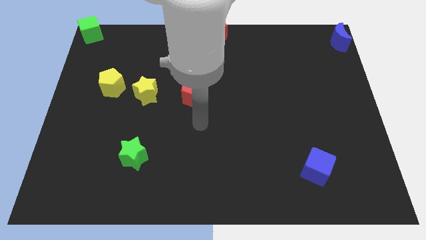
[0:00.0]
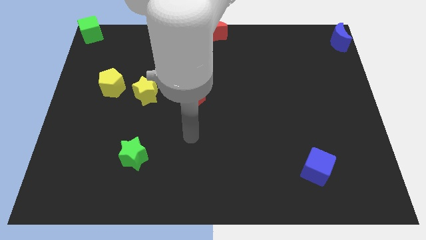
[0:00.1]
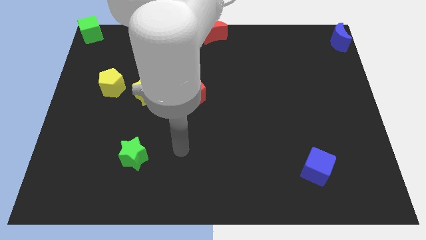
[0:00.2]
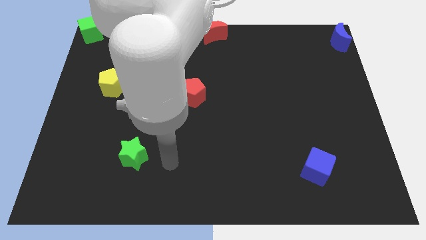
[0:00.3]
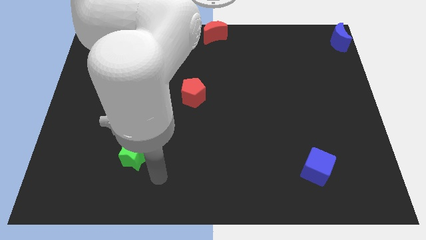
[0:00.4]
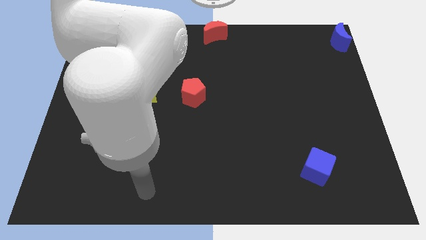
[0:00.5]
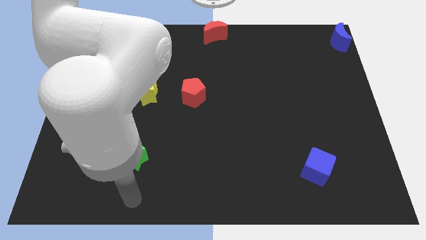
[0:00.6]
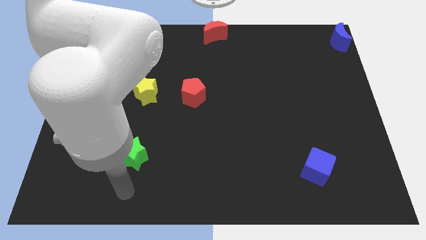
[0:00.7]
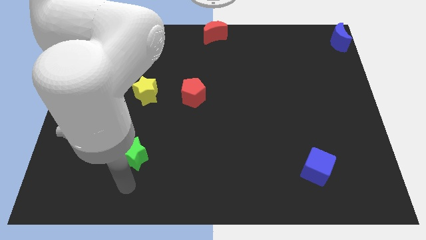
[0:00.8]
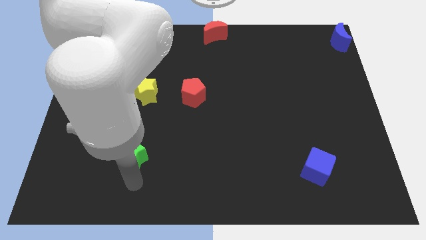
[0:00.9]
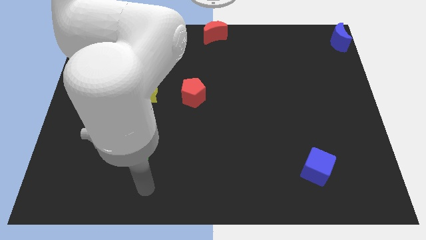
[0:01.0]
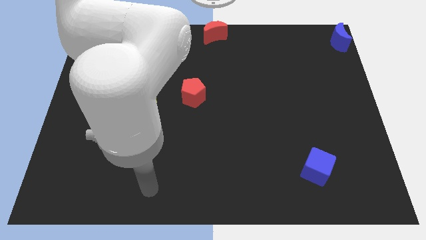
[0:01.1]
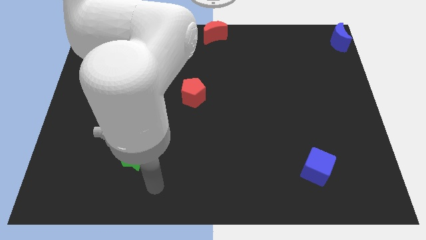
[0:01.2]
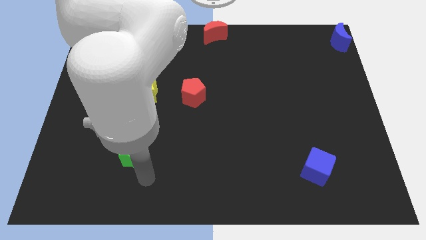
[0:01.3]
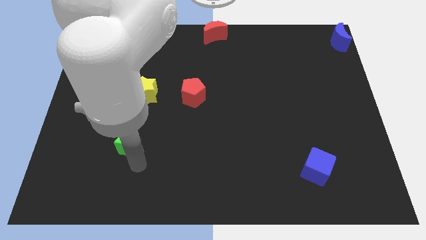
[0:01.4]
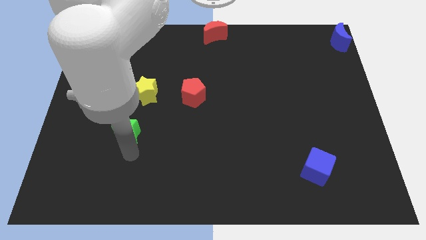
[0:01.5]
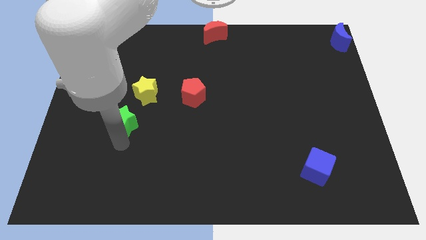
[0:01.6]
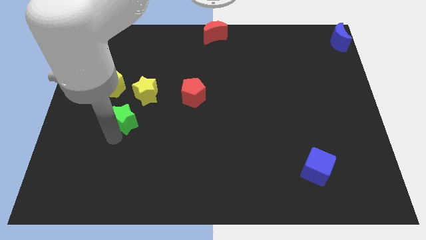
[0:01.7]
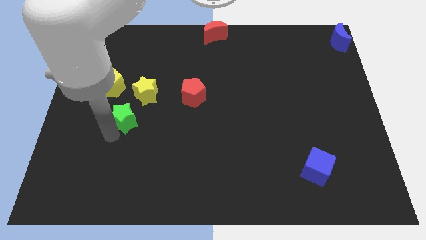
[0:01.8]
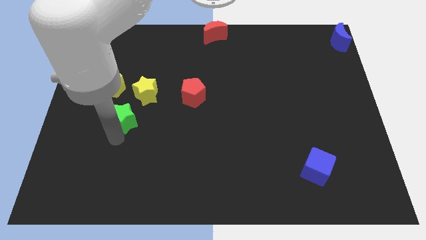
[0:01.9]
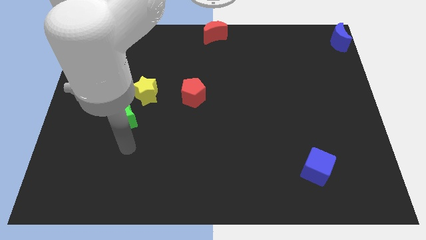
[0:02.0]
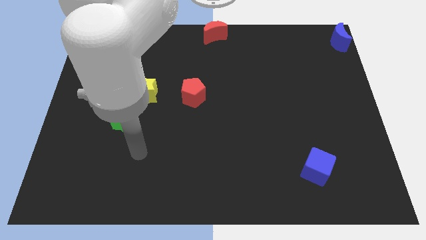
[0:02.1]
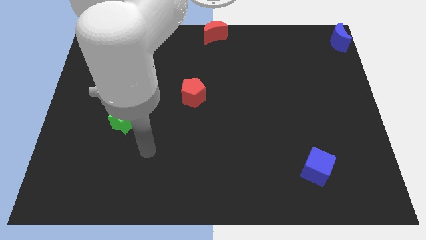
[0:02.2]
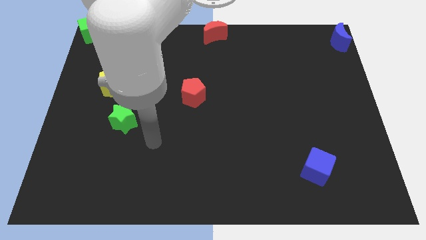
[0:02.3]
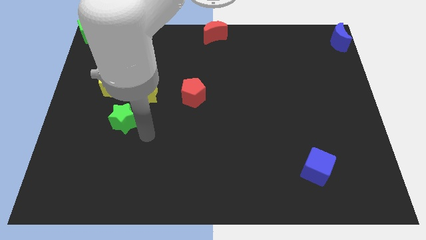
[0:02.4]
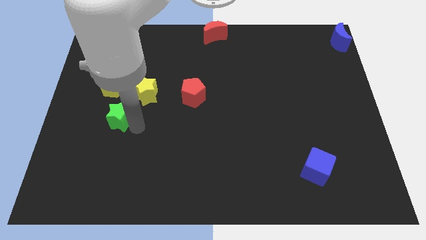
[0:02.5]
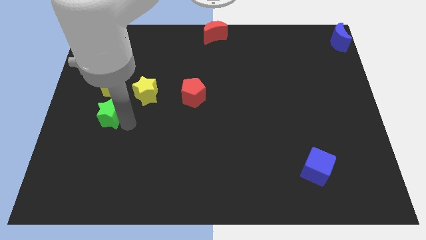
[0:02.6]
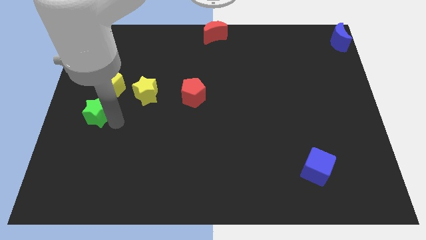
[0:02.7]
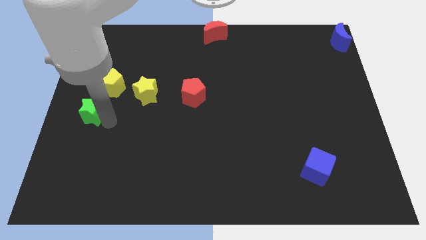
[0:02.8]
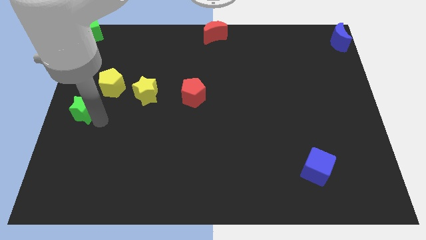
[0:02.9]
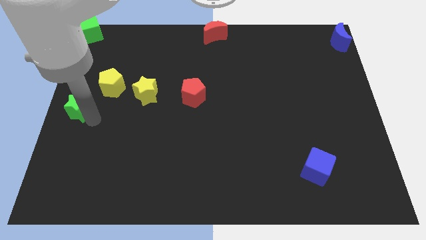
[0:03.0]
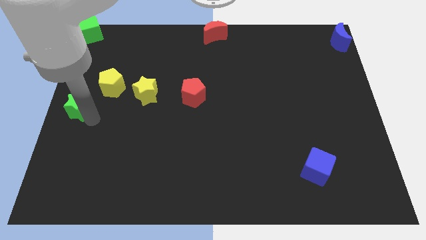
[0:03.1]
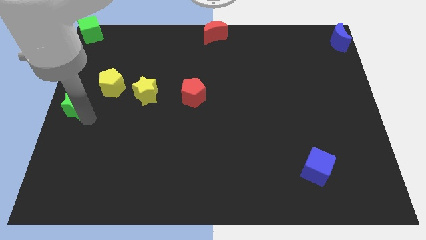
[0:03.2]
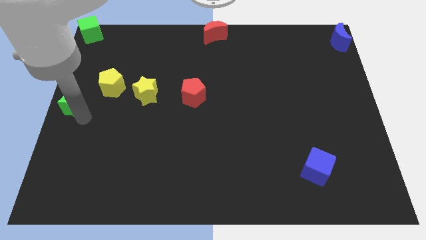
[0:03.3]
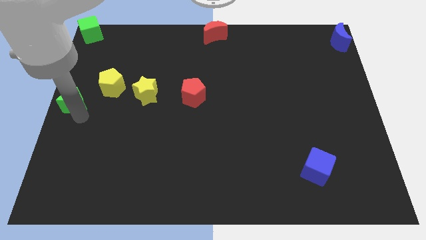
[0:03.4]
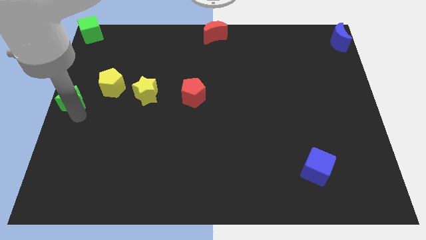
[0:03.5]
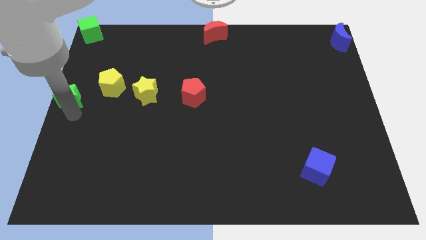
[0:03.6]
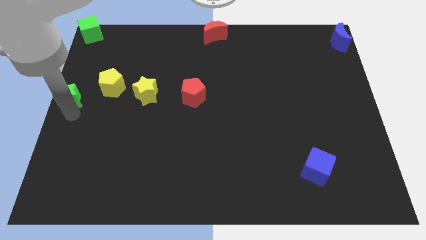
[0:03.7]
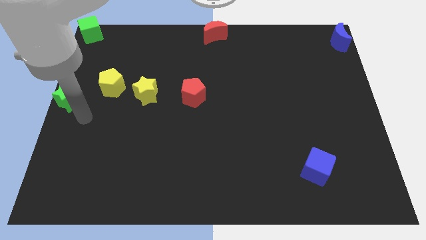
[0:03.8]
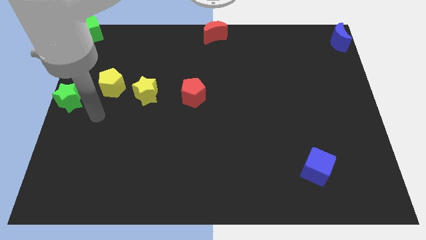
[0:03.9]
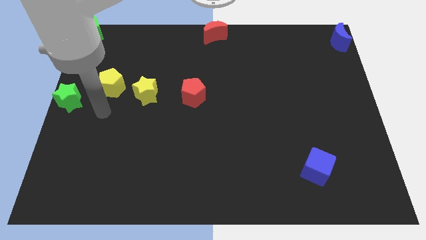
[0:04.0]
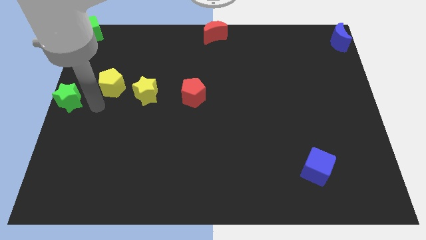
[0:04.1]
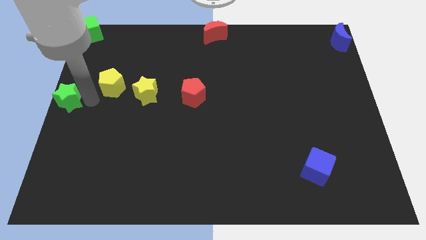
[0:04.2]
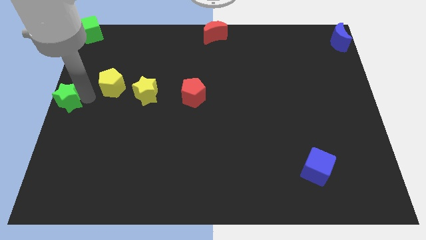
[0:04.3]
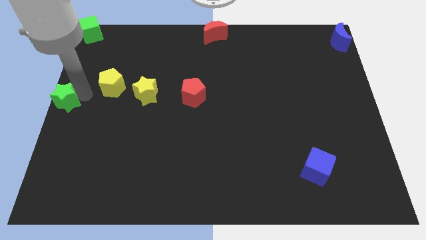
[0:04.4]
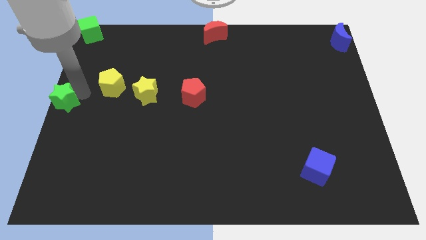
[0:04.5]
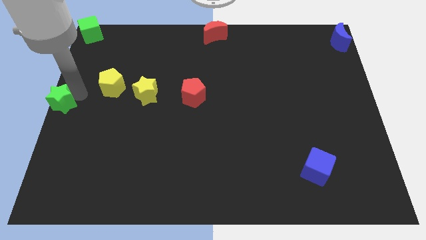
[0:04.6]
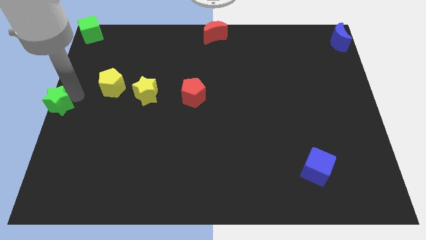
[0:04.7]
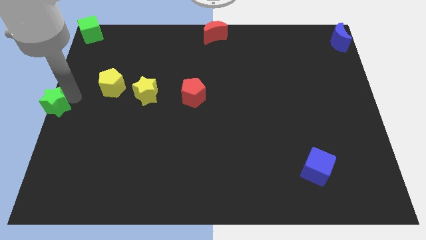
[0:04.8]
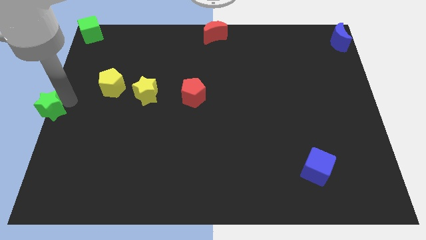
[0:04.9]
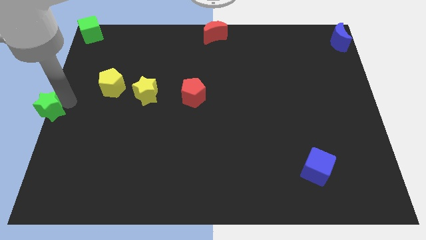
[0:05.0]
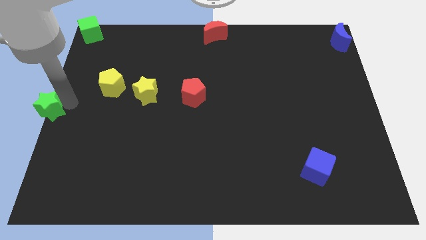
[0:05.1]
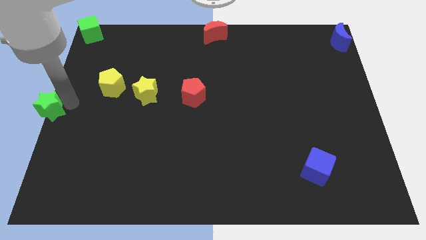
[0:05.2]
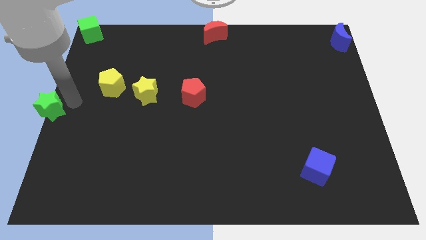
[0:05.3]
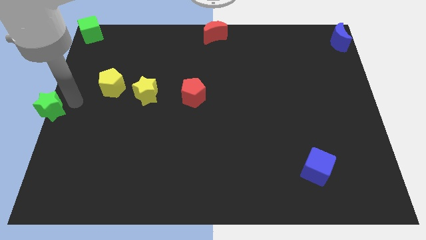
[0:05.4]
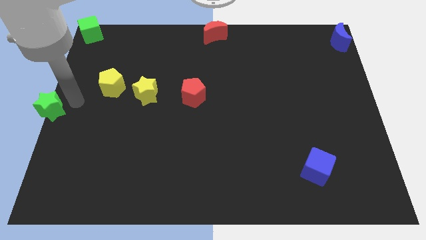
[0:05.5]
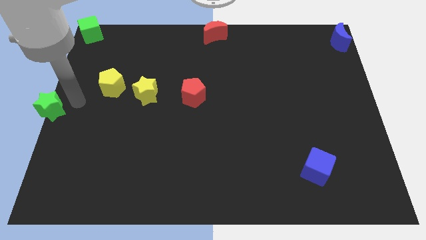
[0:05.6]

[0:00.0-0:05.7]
push the green star to the center left of the board

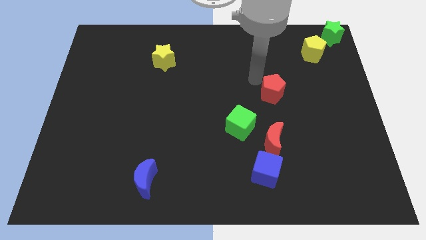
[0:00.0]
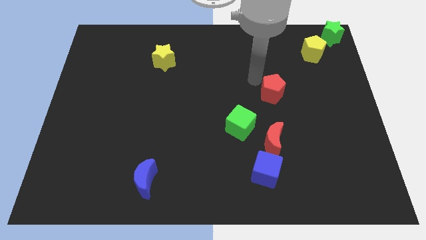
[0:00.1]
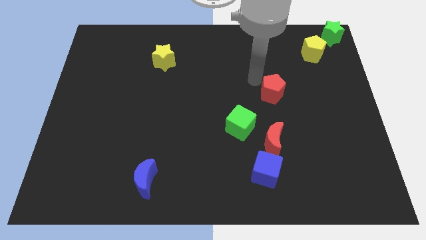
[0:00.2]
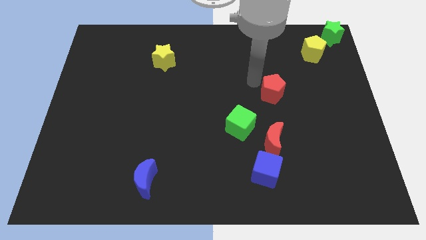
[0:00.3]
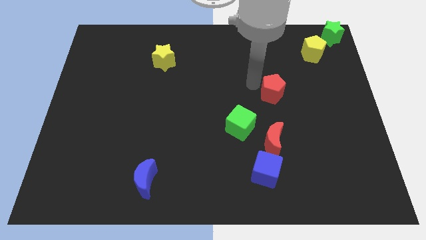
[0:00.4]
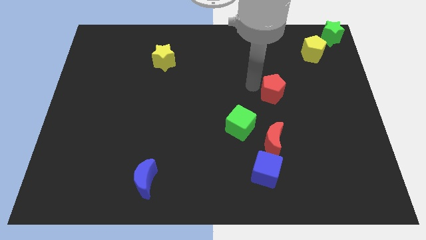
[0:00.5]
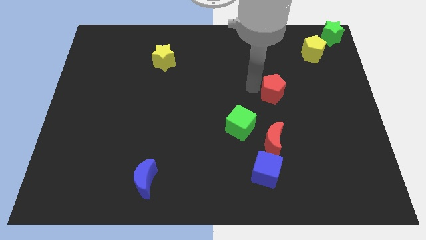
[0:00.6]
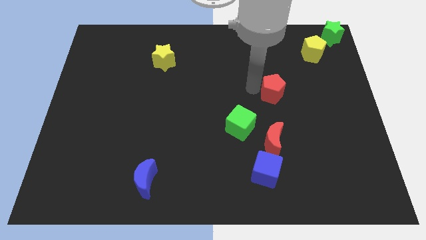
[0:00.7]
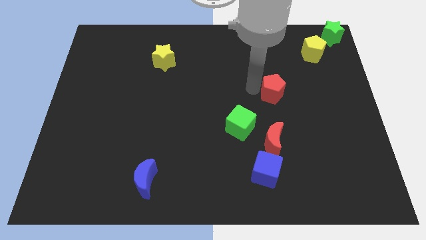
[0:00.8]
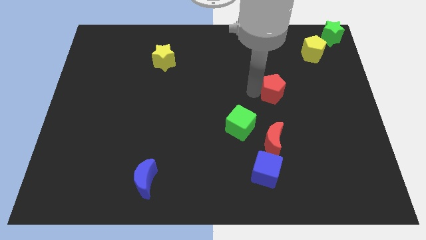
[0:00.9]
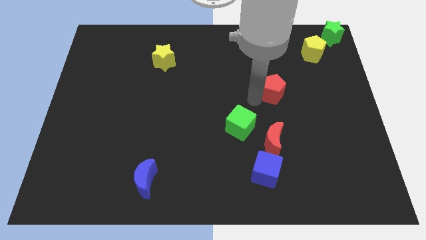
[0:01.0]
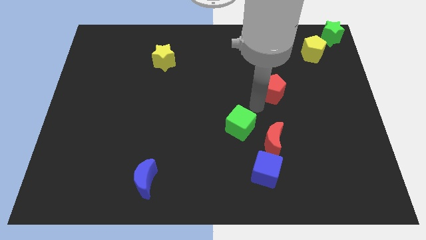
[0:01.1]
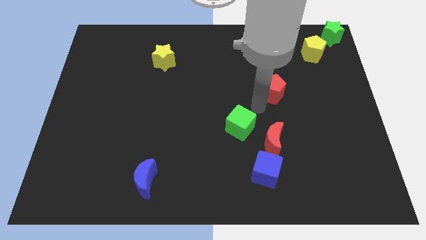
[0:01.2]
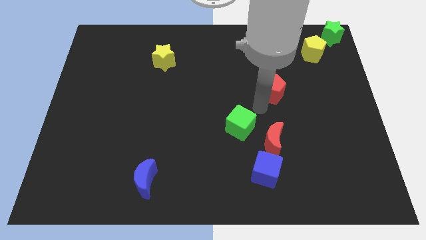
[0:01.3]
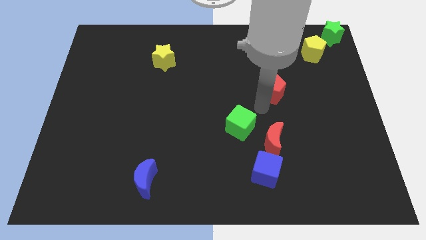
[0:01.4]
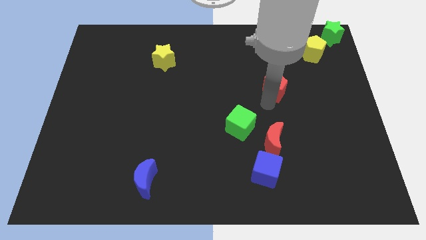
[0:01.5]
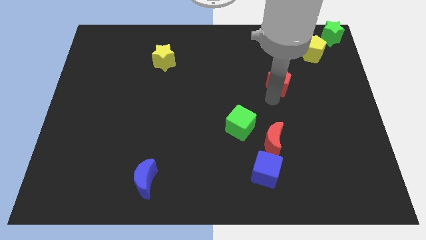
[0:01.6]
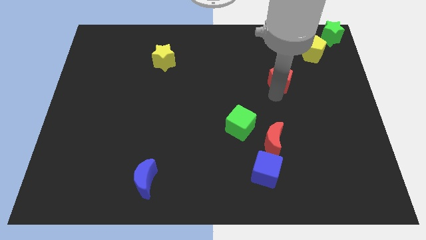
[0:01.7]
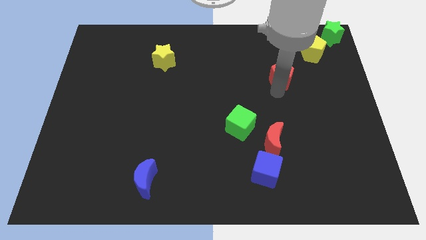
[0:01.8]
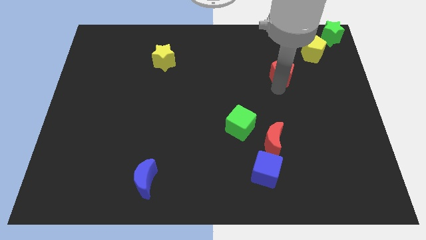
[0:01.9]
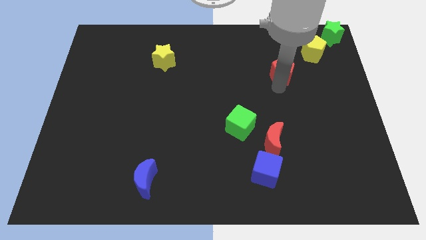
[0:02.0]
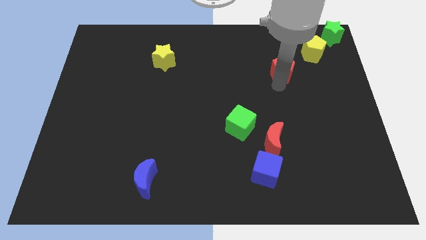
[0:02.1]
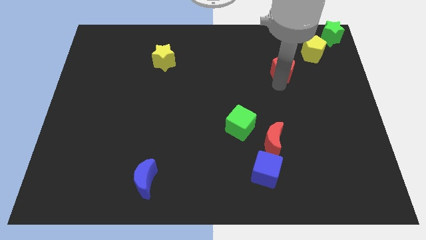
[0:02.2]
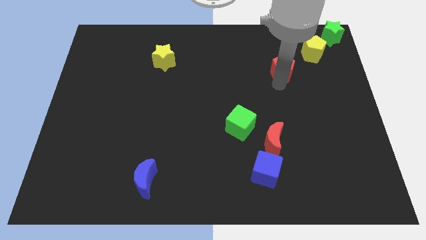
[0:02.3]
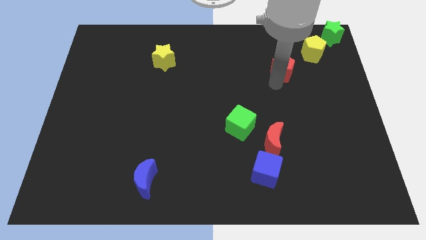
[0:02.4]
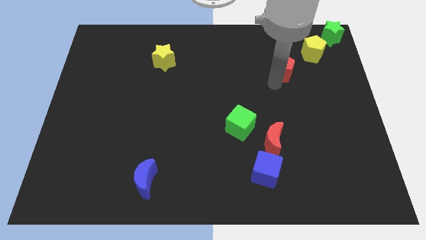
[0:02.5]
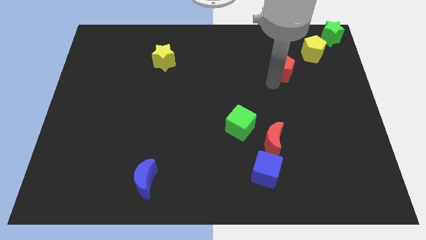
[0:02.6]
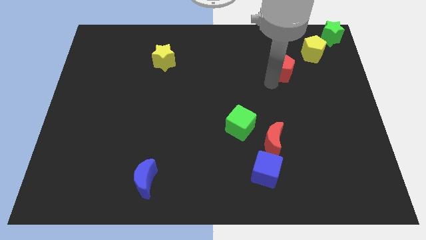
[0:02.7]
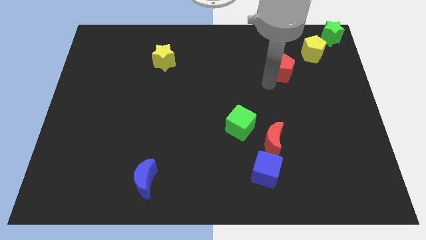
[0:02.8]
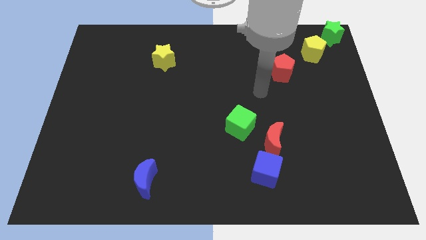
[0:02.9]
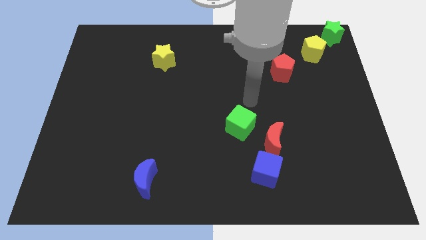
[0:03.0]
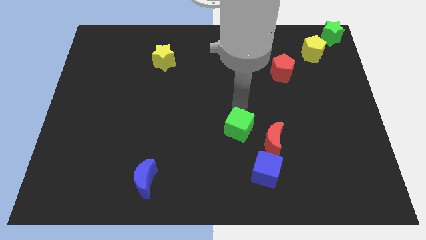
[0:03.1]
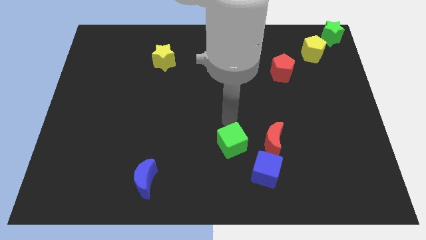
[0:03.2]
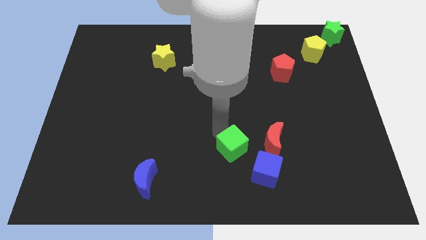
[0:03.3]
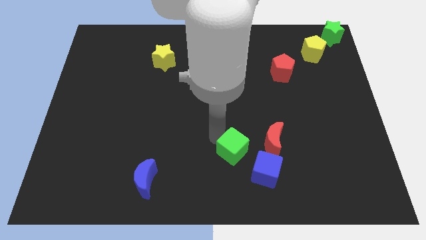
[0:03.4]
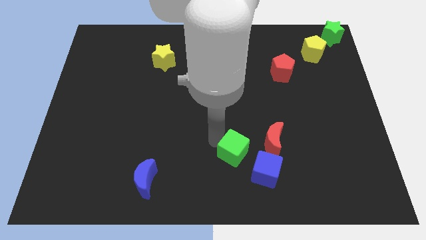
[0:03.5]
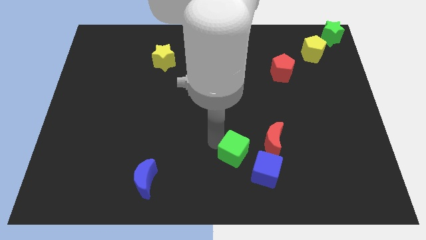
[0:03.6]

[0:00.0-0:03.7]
push the red pentagon towards the yellow pentagon
